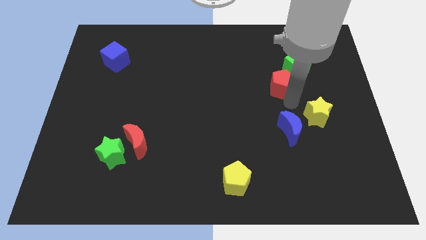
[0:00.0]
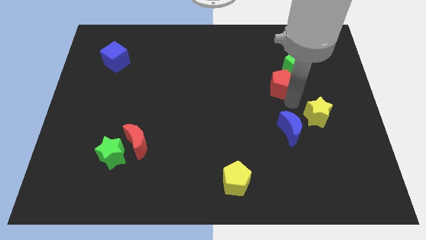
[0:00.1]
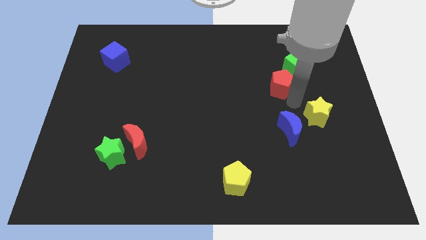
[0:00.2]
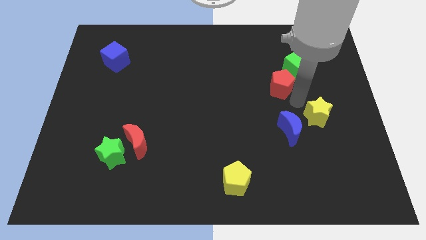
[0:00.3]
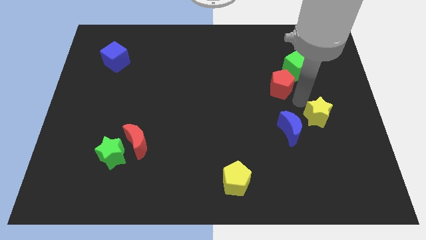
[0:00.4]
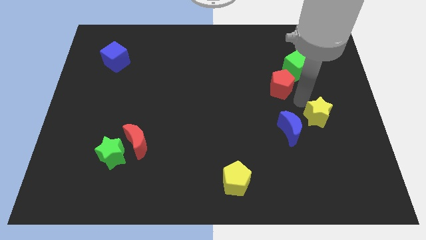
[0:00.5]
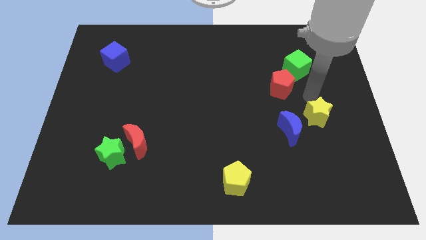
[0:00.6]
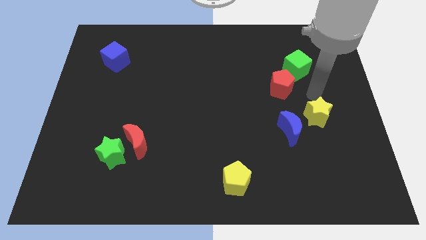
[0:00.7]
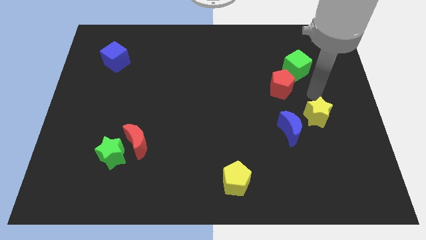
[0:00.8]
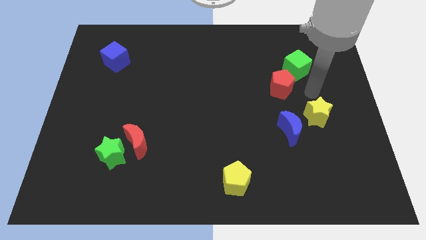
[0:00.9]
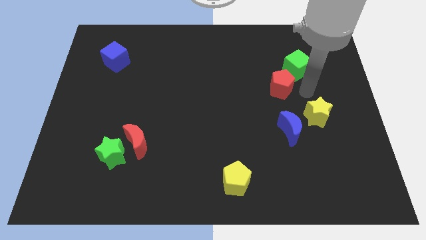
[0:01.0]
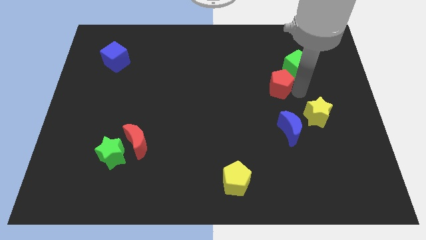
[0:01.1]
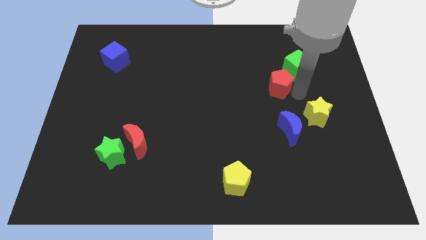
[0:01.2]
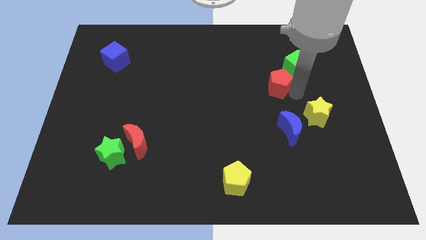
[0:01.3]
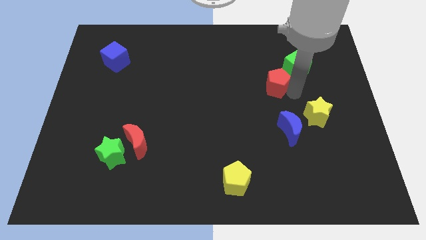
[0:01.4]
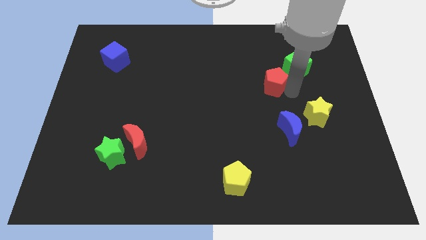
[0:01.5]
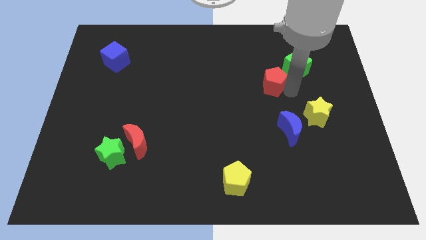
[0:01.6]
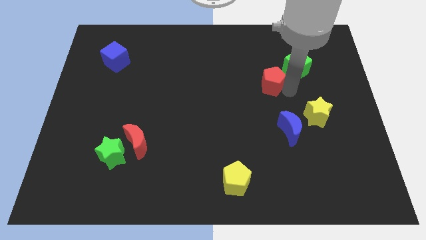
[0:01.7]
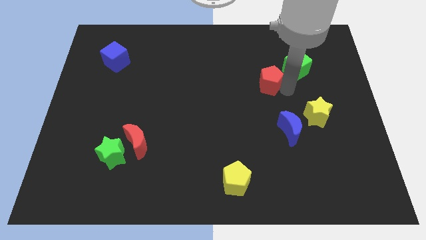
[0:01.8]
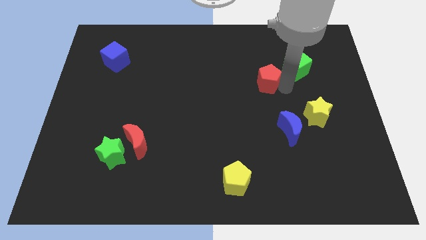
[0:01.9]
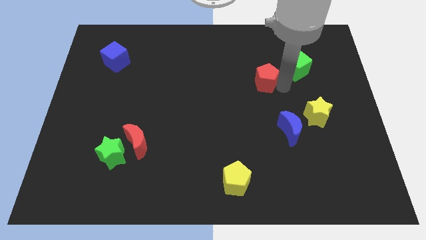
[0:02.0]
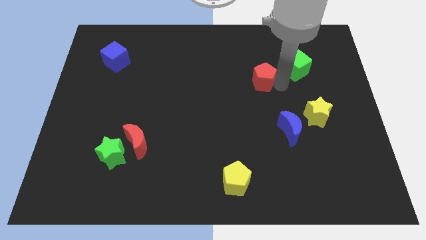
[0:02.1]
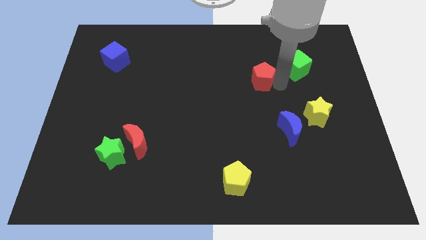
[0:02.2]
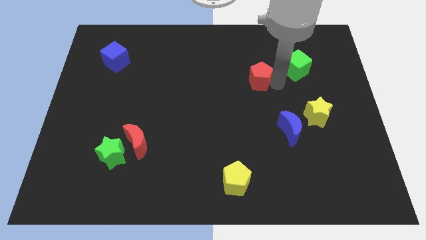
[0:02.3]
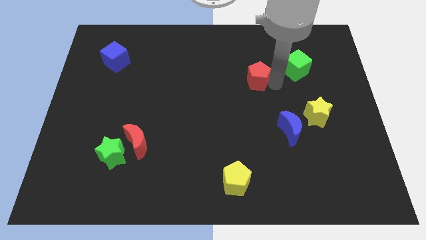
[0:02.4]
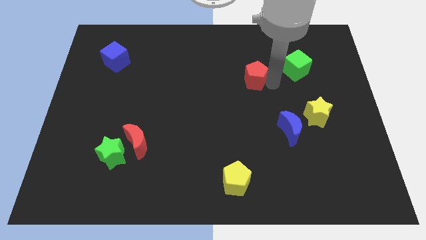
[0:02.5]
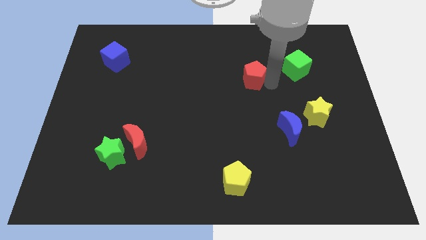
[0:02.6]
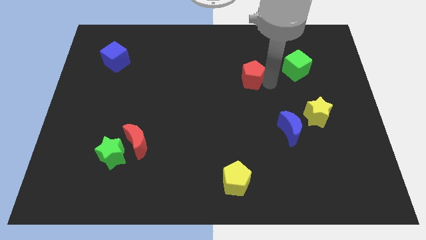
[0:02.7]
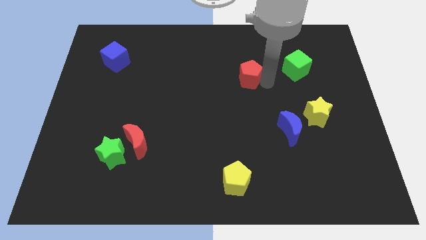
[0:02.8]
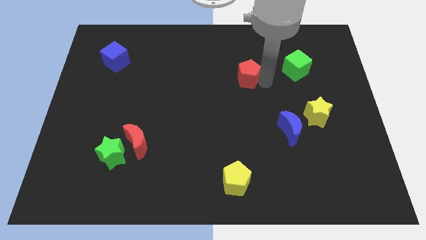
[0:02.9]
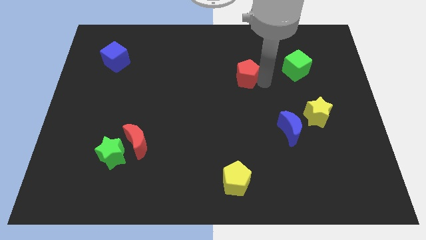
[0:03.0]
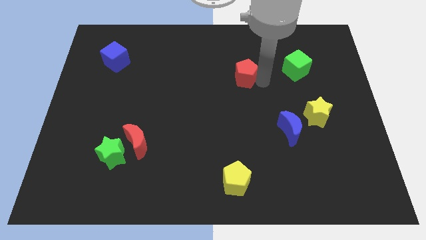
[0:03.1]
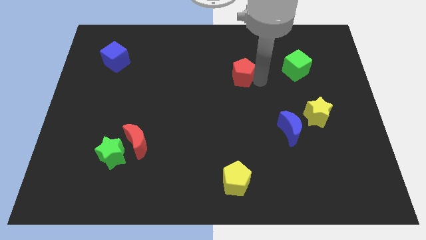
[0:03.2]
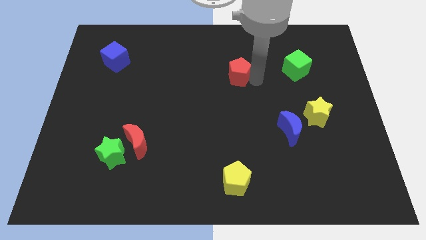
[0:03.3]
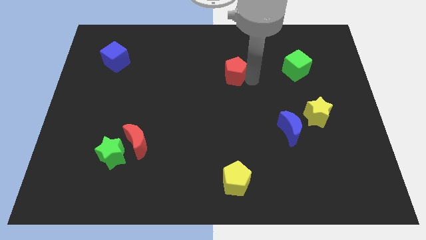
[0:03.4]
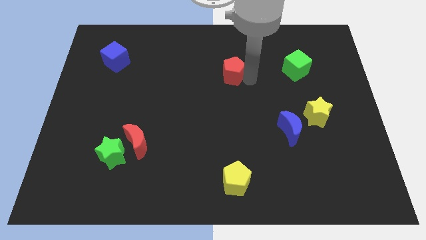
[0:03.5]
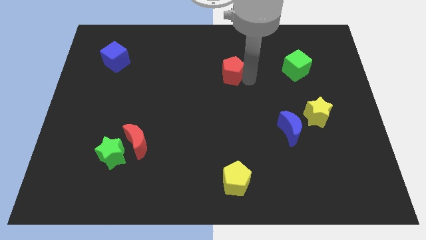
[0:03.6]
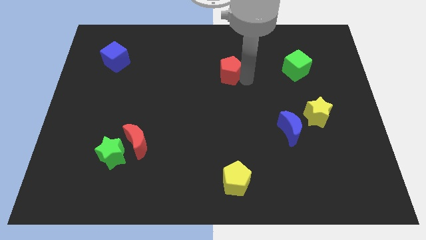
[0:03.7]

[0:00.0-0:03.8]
separate red pentagon from green cube

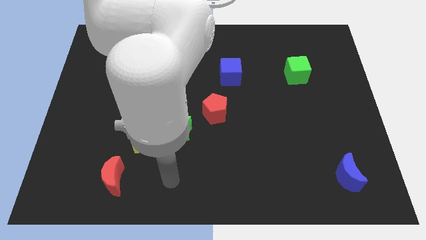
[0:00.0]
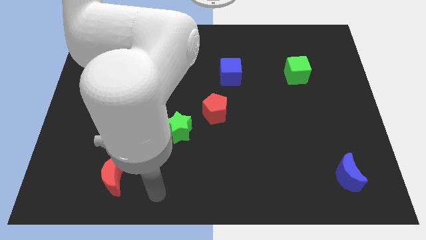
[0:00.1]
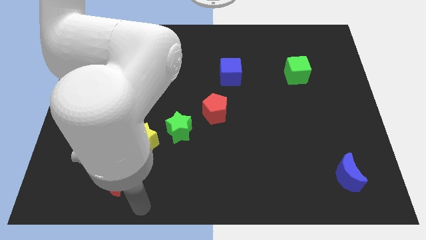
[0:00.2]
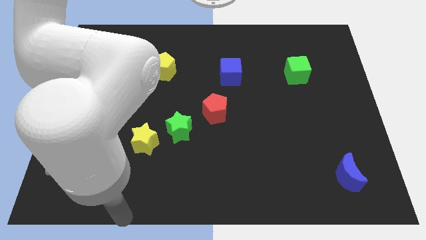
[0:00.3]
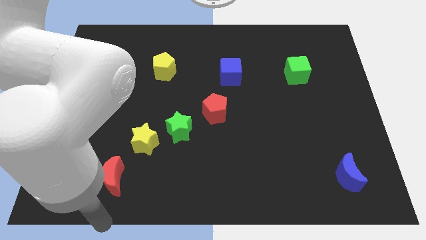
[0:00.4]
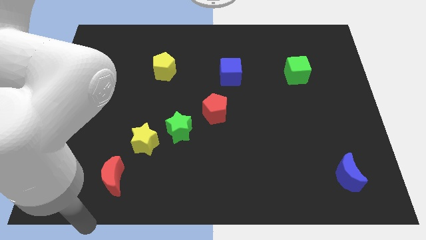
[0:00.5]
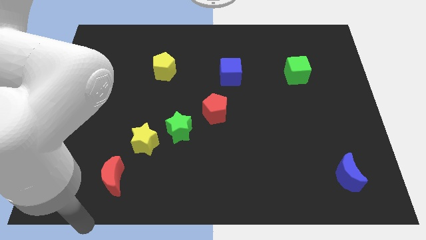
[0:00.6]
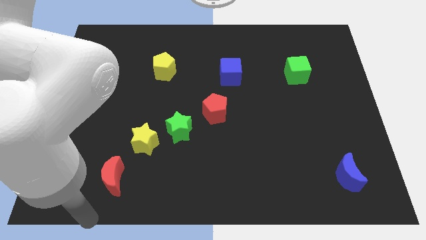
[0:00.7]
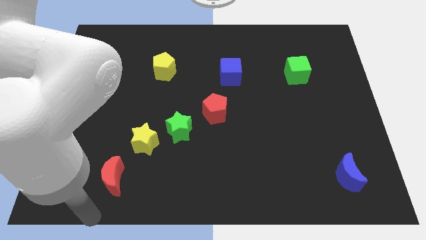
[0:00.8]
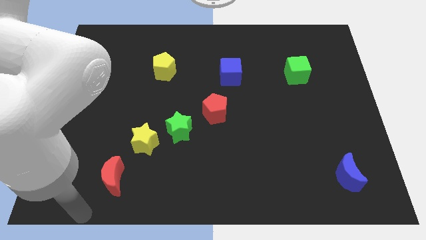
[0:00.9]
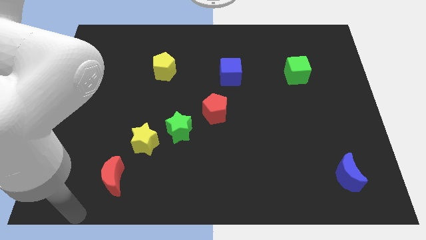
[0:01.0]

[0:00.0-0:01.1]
move the arm to the bottom of the red crescent

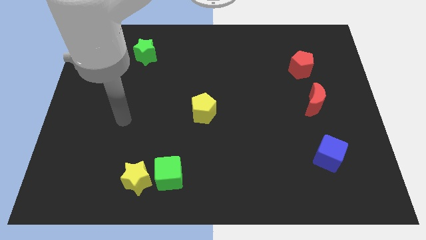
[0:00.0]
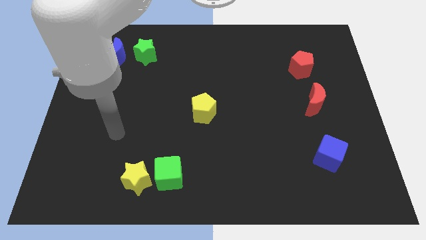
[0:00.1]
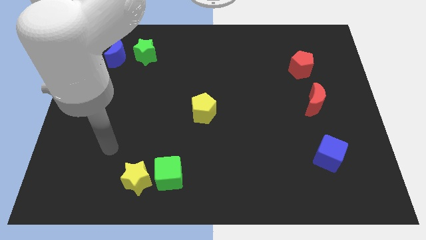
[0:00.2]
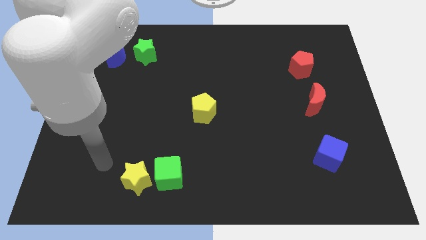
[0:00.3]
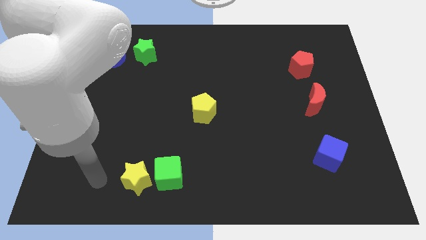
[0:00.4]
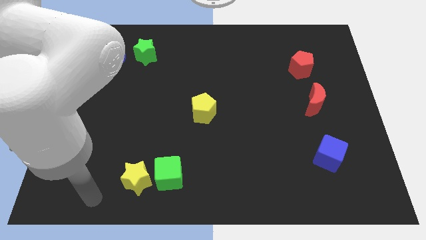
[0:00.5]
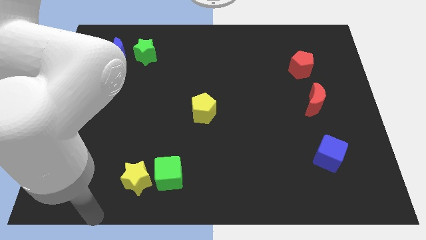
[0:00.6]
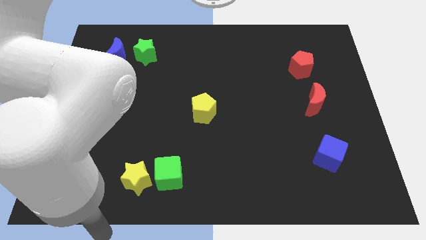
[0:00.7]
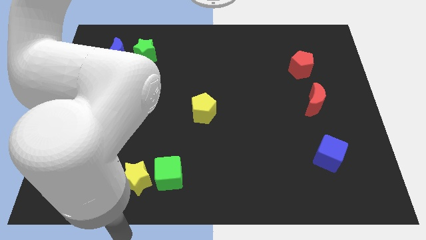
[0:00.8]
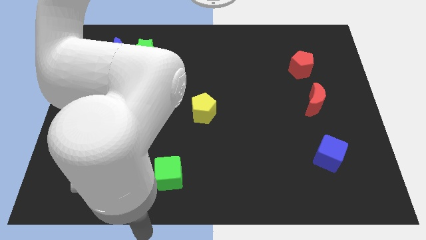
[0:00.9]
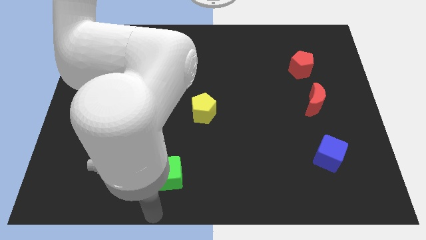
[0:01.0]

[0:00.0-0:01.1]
place your arm at the bottom of the green cube

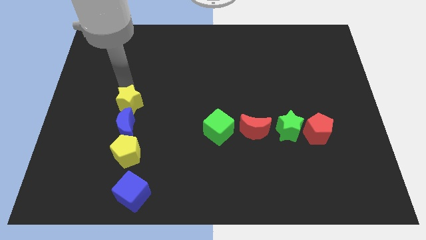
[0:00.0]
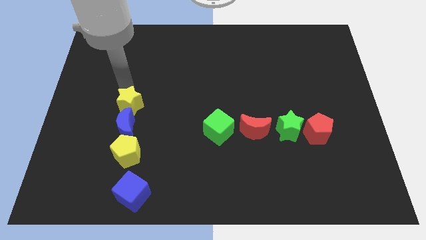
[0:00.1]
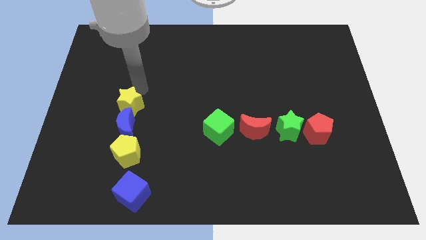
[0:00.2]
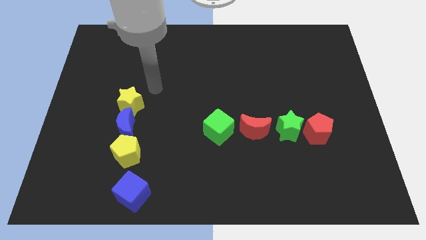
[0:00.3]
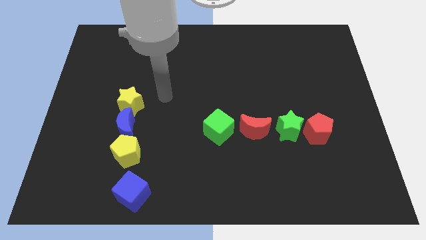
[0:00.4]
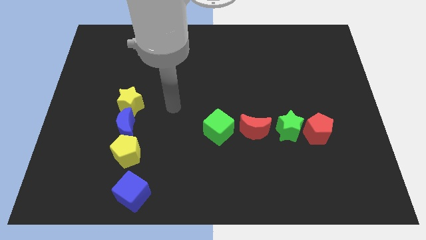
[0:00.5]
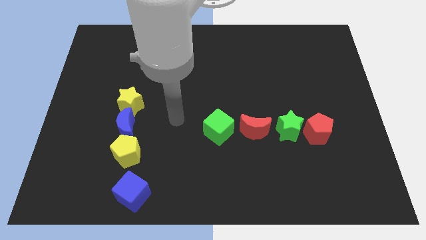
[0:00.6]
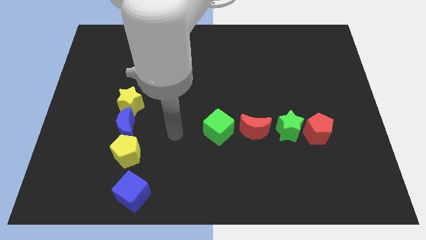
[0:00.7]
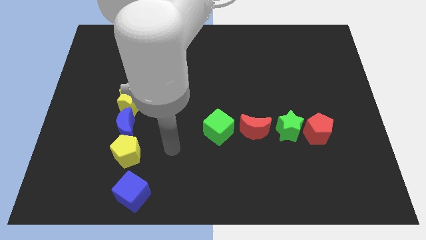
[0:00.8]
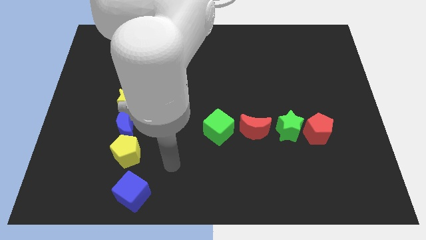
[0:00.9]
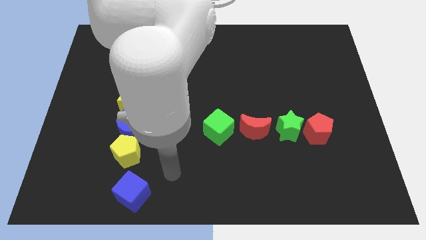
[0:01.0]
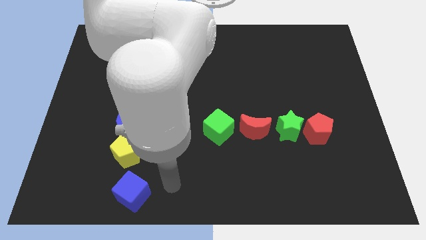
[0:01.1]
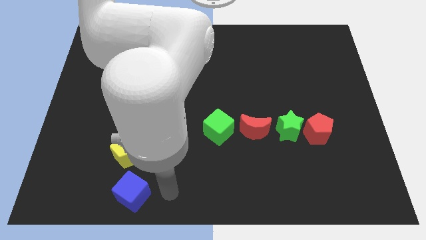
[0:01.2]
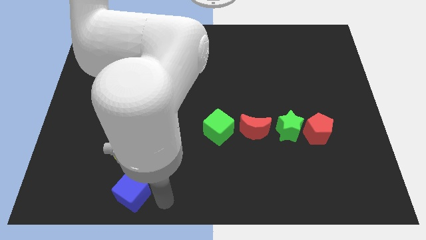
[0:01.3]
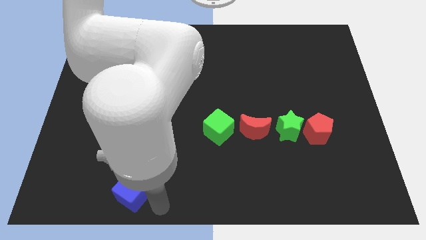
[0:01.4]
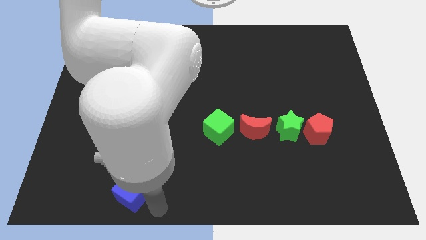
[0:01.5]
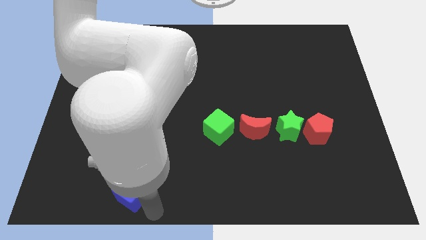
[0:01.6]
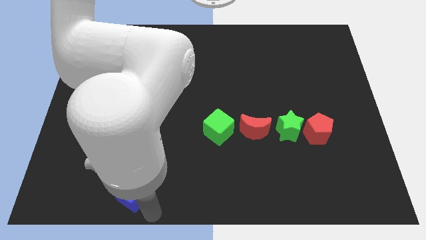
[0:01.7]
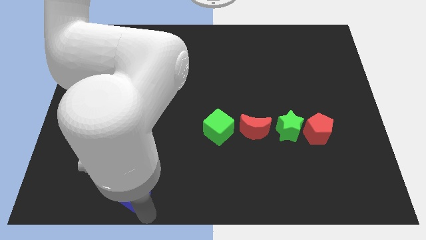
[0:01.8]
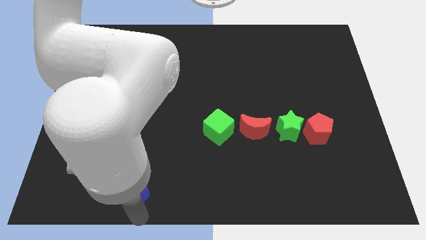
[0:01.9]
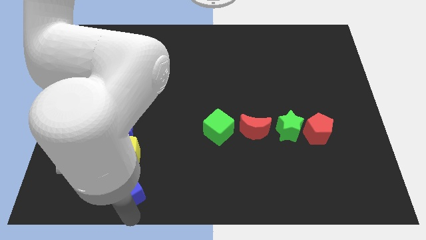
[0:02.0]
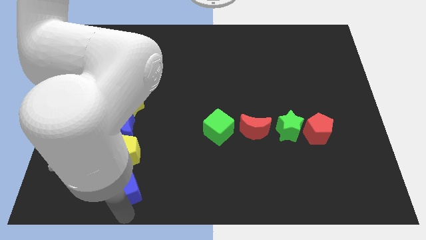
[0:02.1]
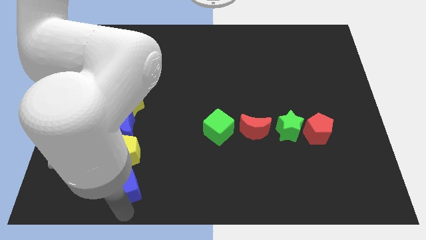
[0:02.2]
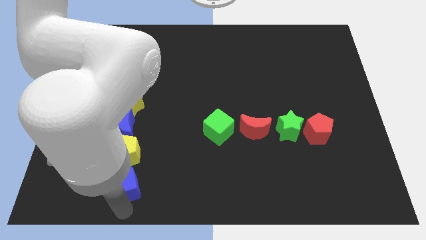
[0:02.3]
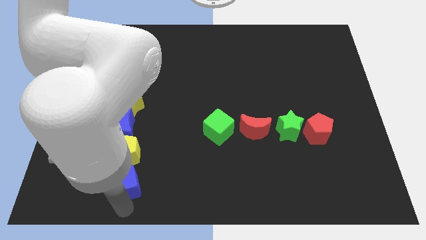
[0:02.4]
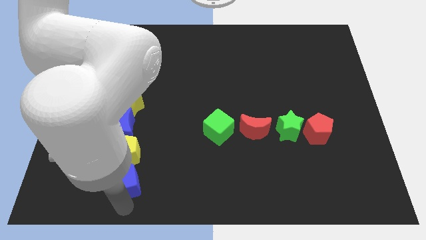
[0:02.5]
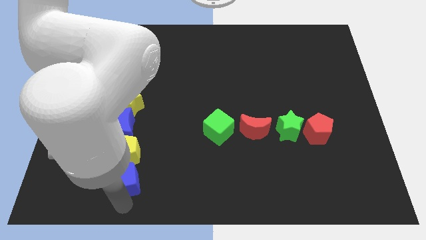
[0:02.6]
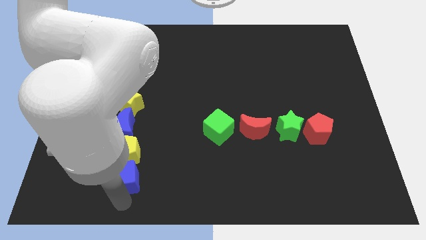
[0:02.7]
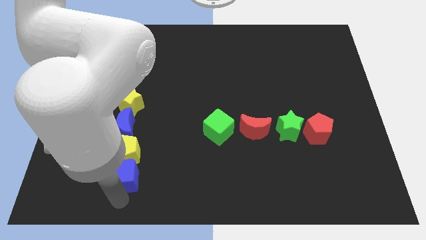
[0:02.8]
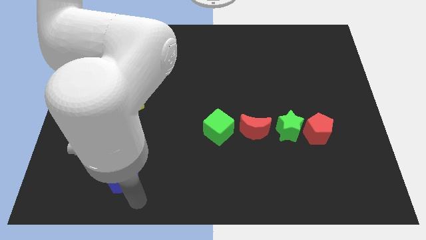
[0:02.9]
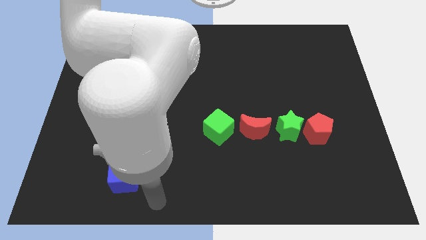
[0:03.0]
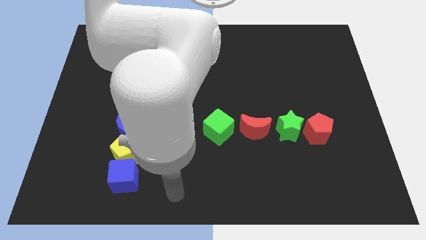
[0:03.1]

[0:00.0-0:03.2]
move blue cube close to yellow pentagon
